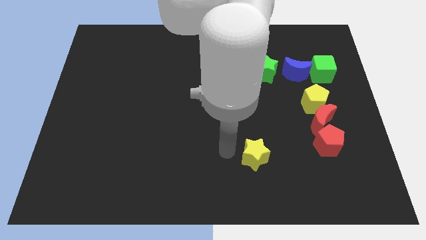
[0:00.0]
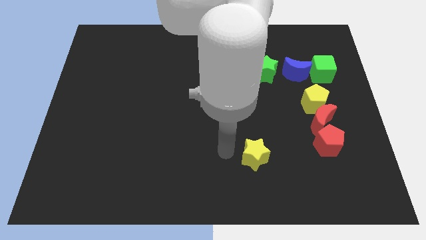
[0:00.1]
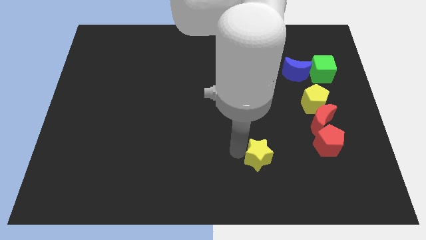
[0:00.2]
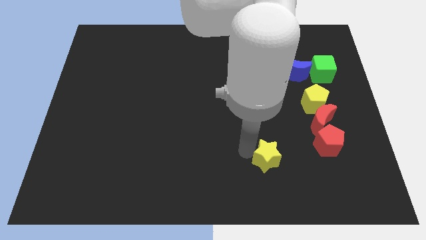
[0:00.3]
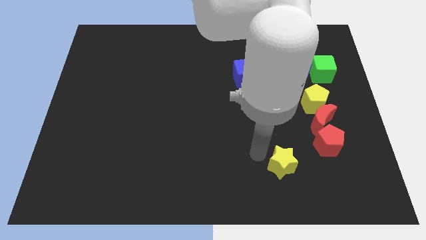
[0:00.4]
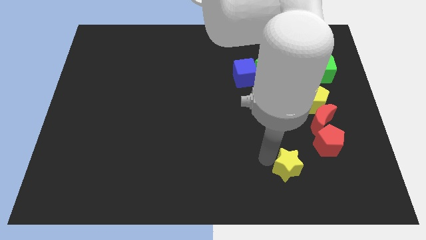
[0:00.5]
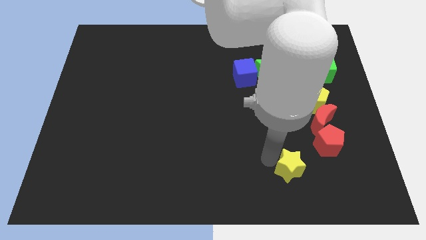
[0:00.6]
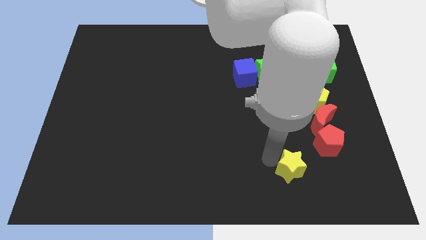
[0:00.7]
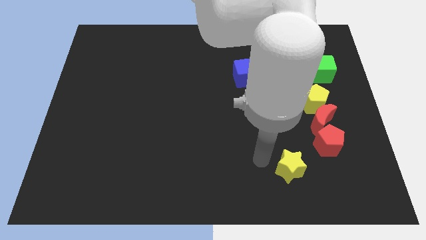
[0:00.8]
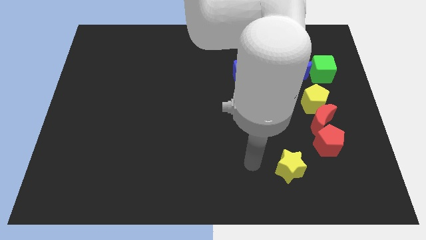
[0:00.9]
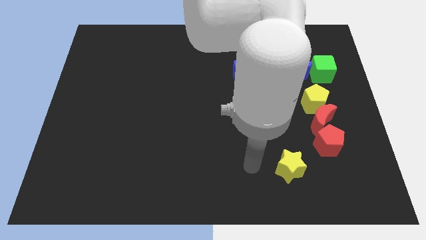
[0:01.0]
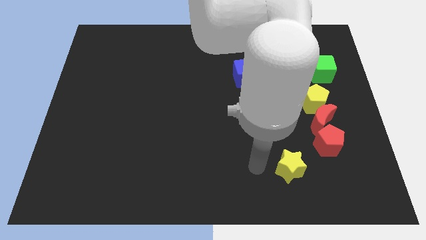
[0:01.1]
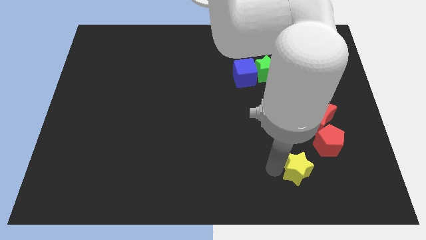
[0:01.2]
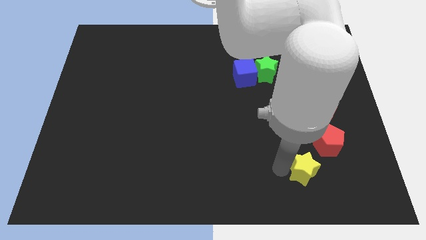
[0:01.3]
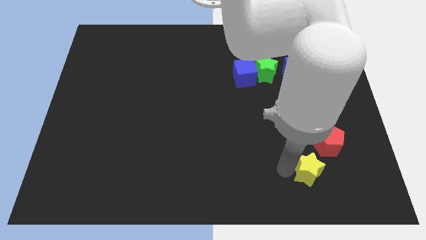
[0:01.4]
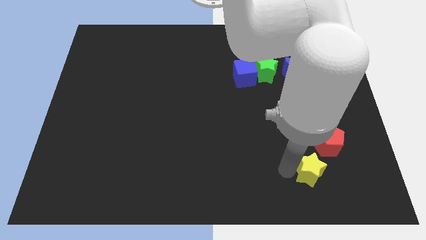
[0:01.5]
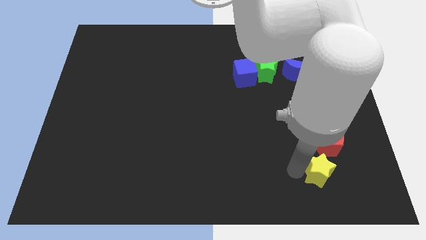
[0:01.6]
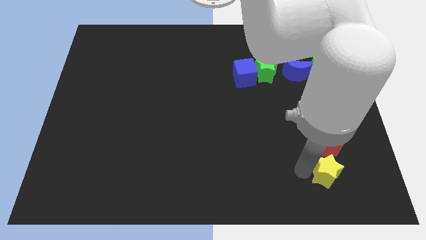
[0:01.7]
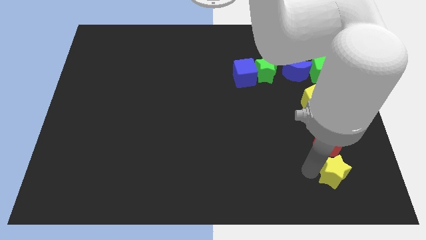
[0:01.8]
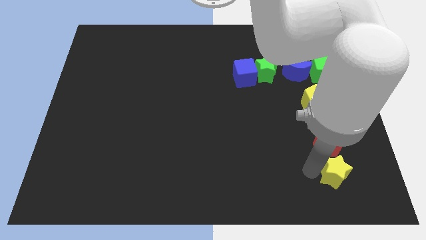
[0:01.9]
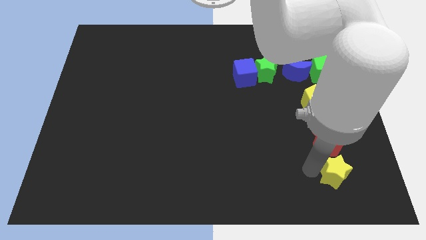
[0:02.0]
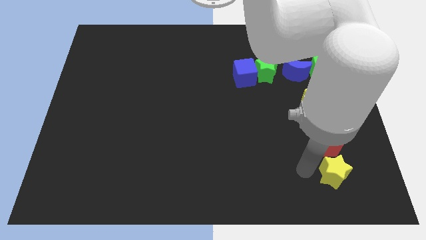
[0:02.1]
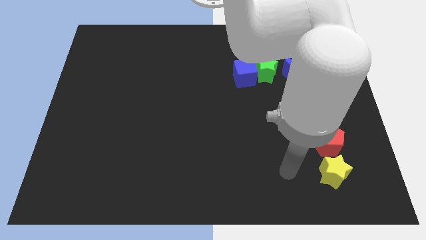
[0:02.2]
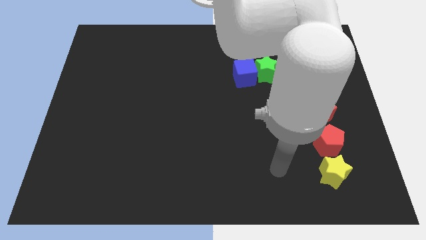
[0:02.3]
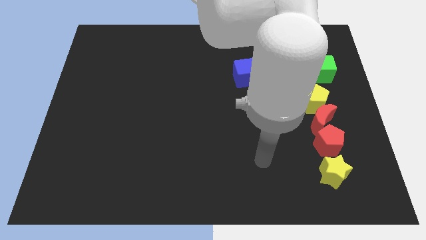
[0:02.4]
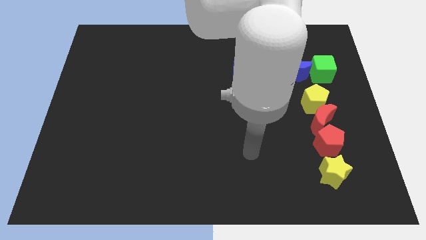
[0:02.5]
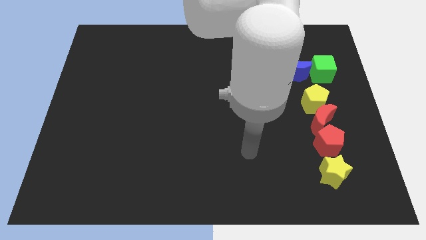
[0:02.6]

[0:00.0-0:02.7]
move the yellow star to the bottom side of the red pentagon

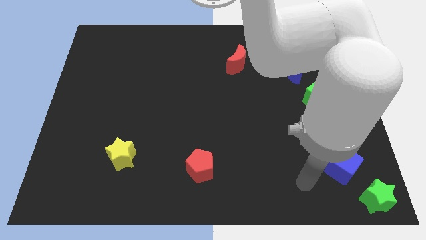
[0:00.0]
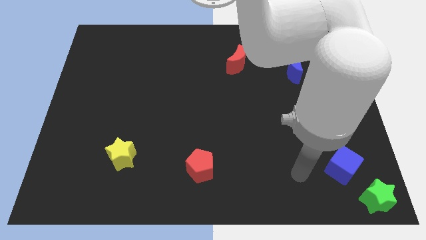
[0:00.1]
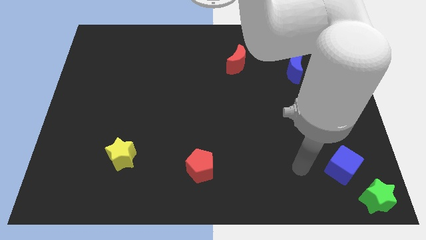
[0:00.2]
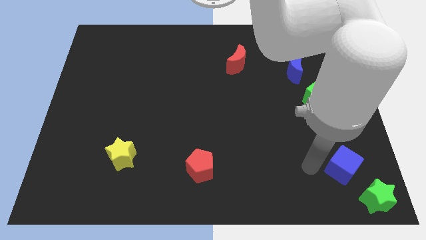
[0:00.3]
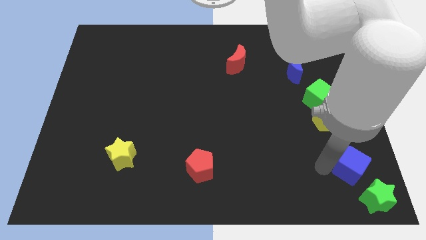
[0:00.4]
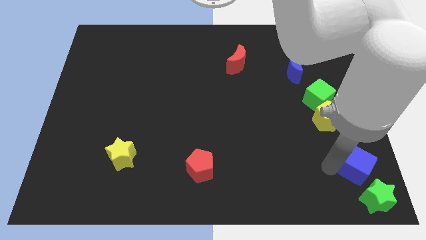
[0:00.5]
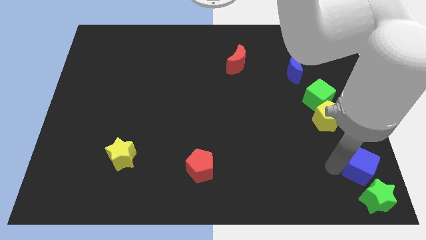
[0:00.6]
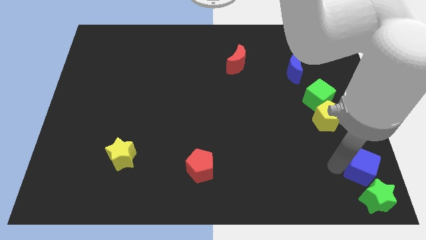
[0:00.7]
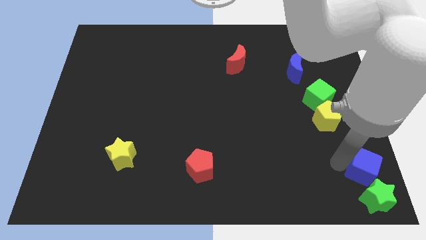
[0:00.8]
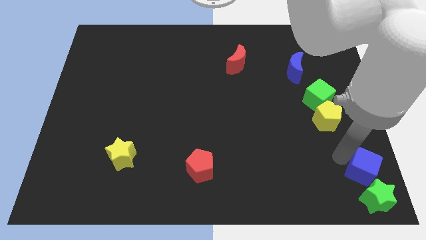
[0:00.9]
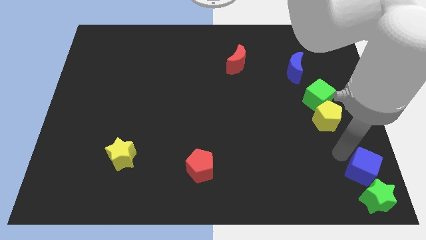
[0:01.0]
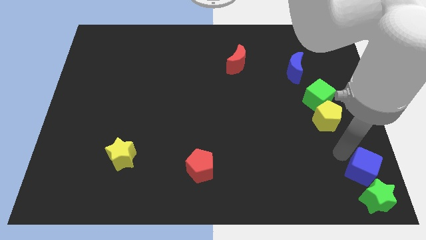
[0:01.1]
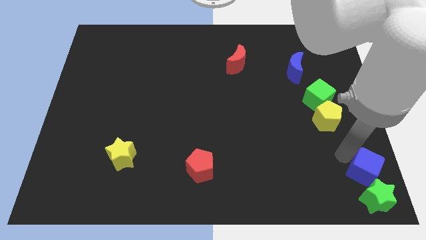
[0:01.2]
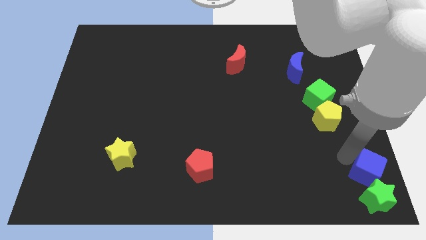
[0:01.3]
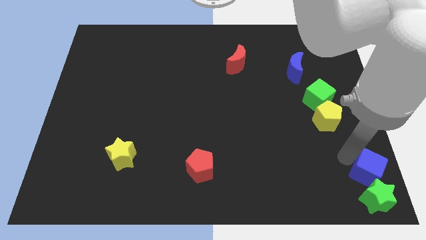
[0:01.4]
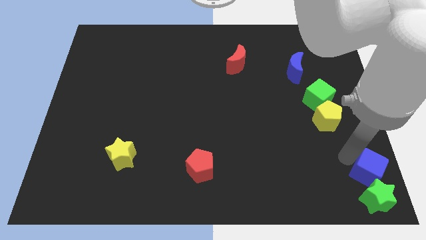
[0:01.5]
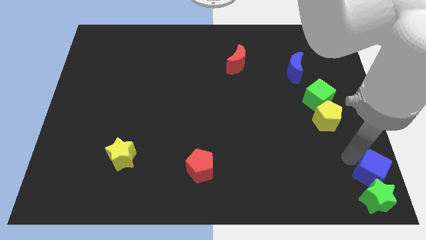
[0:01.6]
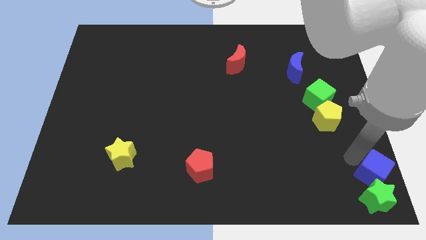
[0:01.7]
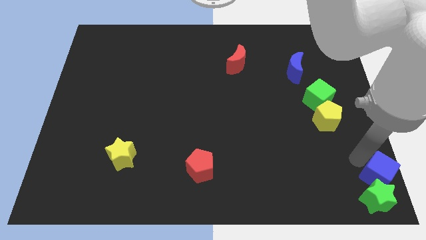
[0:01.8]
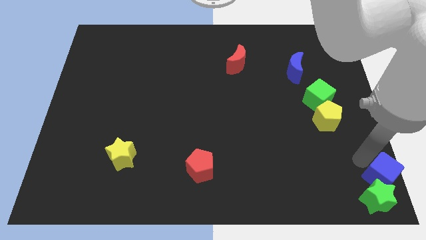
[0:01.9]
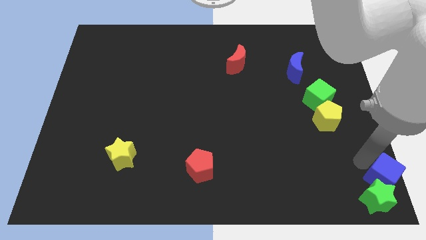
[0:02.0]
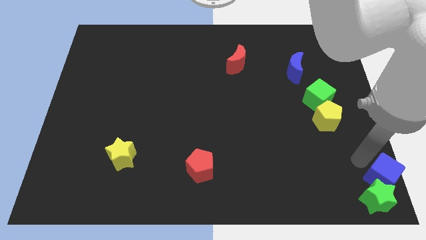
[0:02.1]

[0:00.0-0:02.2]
move the blue cube above right to the green star

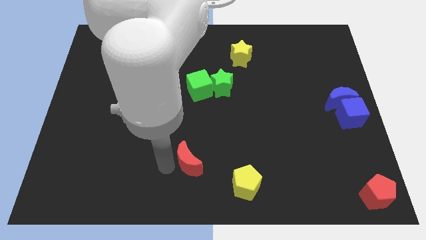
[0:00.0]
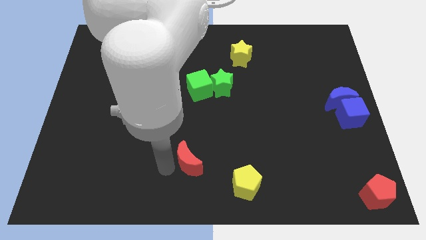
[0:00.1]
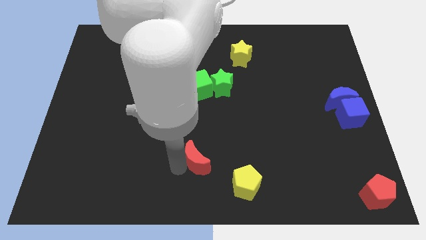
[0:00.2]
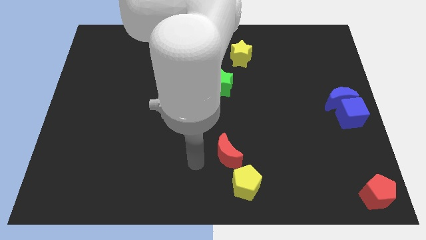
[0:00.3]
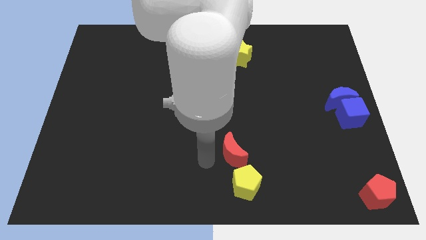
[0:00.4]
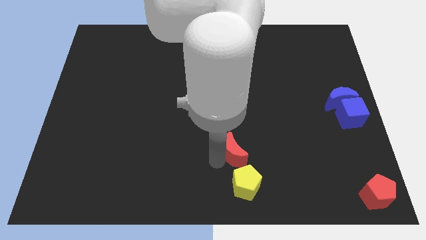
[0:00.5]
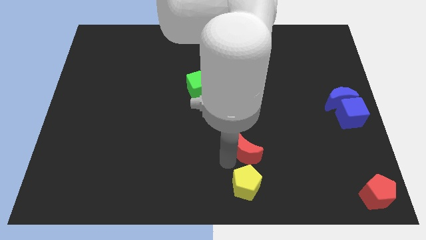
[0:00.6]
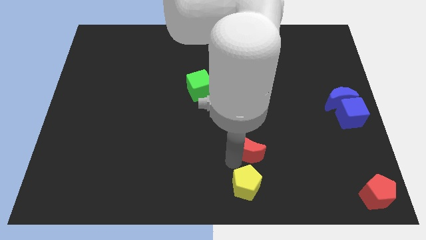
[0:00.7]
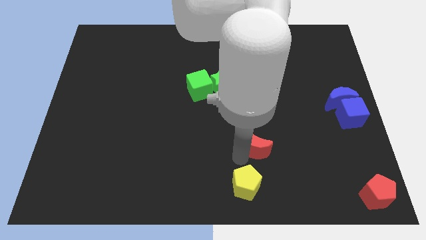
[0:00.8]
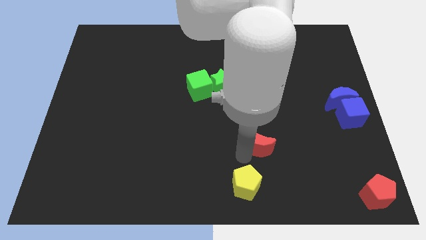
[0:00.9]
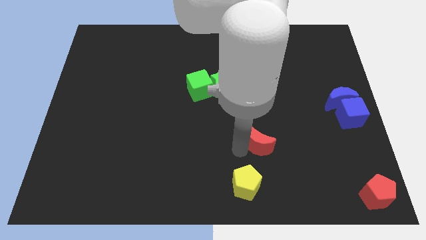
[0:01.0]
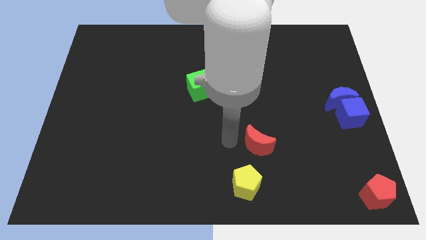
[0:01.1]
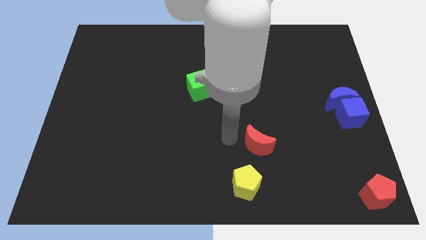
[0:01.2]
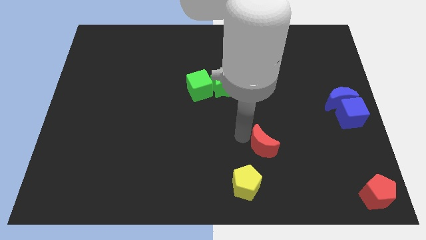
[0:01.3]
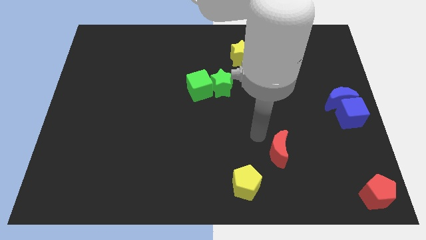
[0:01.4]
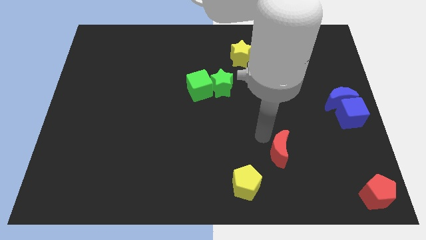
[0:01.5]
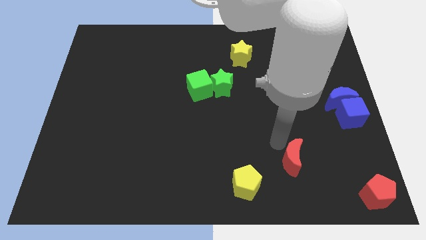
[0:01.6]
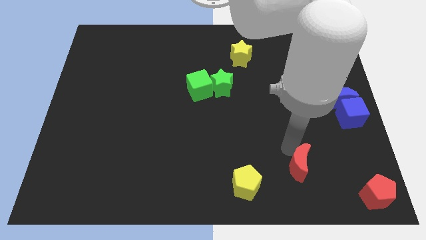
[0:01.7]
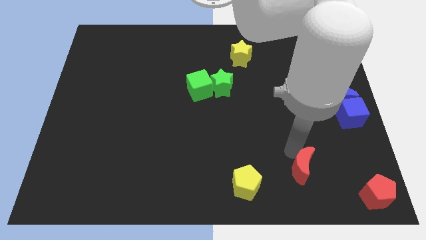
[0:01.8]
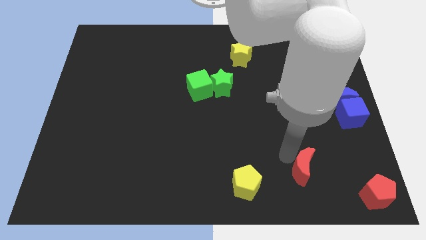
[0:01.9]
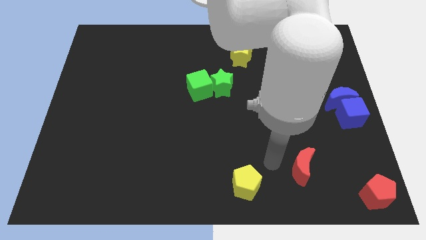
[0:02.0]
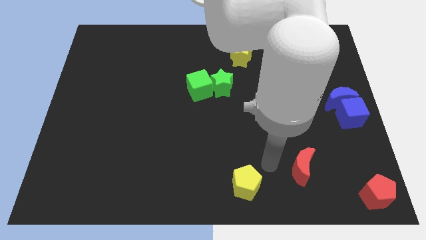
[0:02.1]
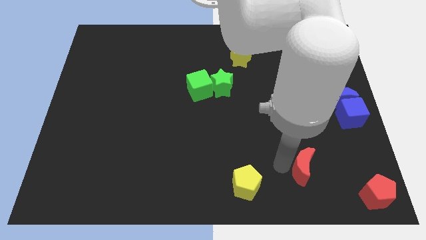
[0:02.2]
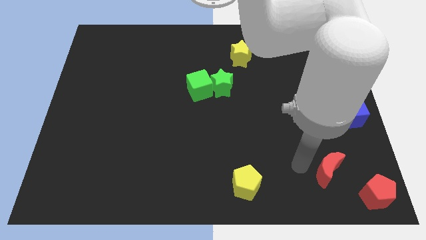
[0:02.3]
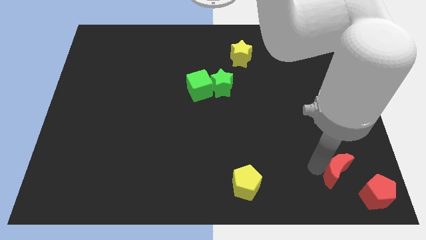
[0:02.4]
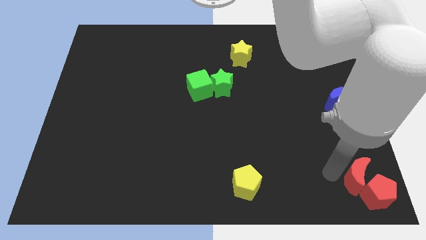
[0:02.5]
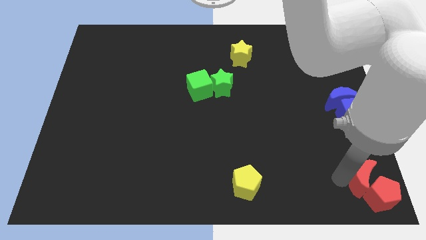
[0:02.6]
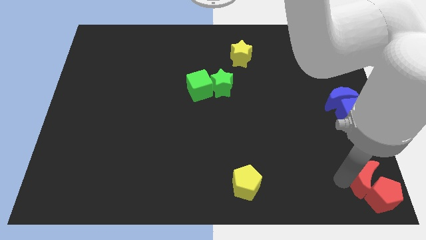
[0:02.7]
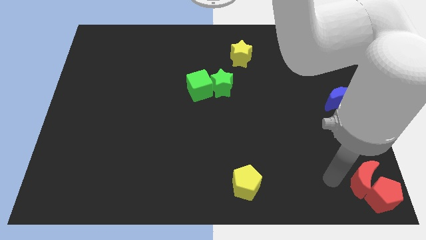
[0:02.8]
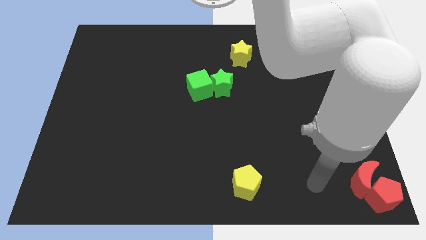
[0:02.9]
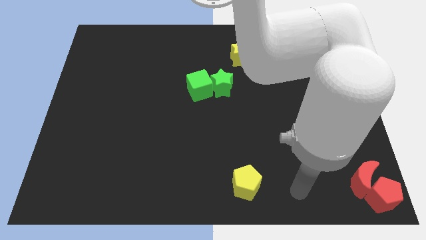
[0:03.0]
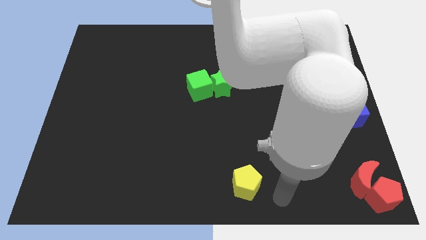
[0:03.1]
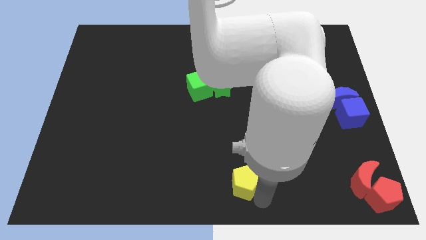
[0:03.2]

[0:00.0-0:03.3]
push the red crescent into the red pentagon

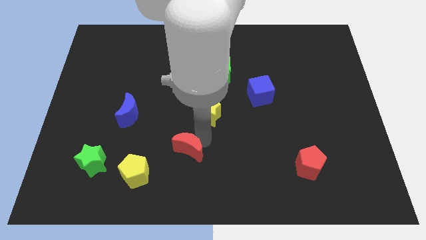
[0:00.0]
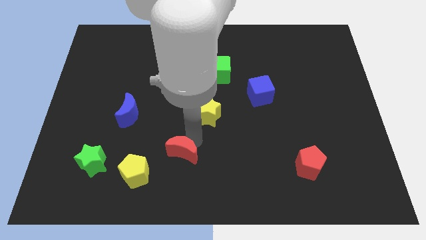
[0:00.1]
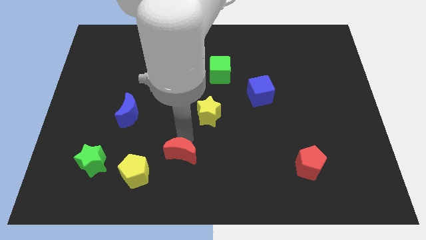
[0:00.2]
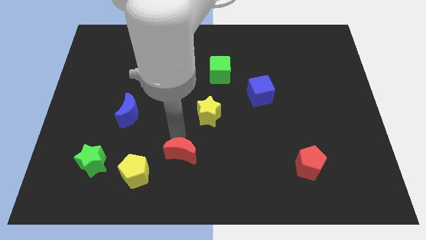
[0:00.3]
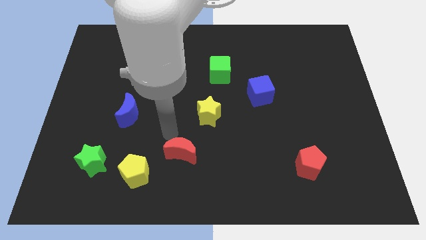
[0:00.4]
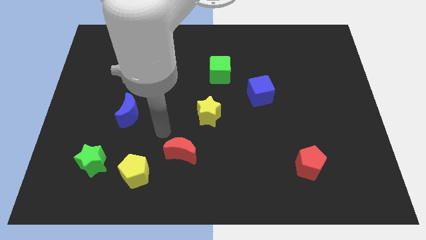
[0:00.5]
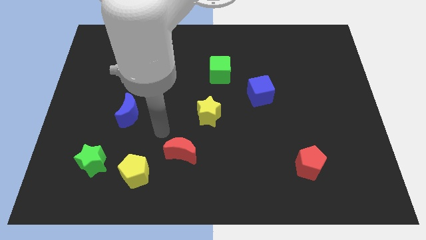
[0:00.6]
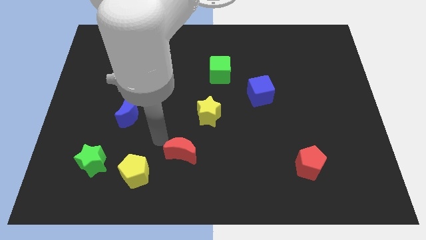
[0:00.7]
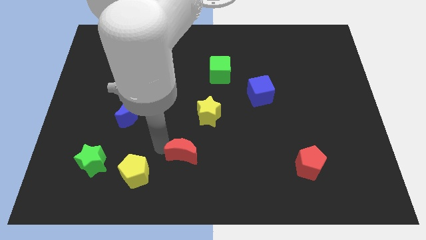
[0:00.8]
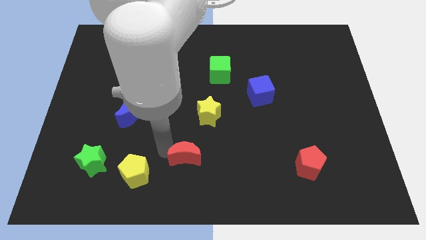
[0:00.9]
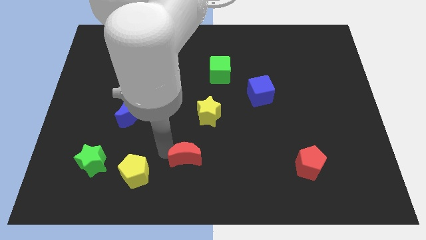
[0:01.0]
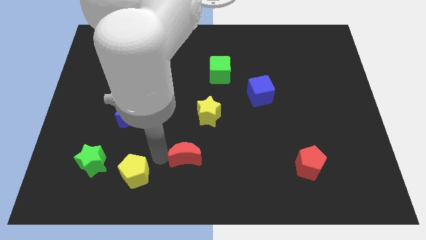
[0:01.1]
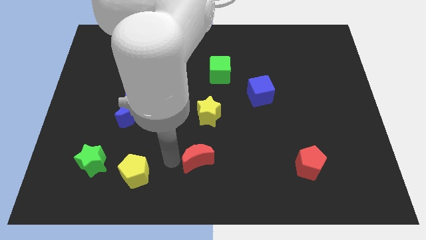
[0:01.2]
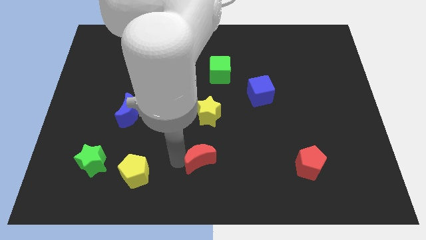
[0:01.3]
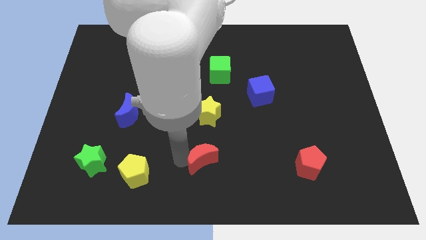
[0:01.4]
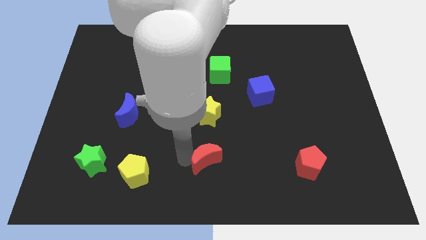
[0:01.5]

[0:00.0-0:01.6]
slide the red moon vertically below the yellow star
